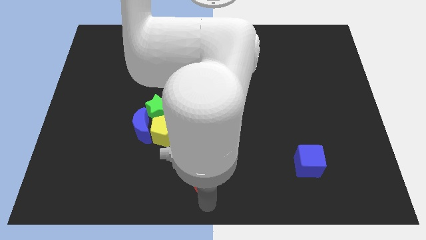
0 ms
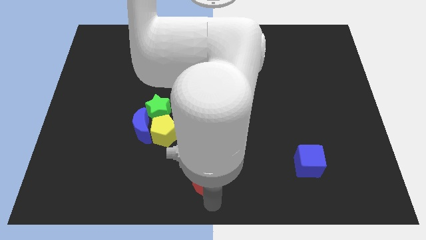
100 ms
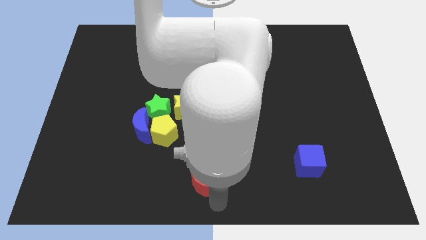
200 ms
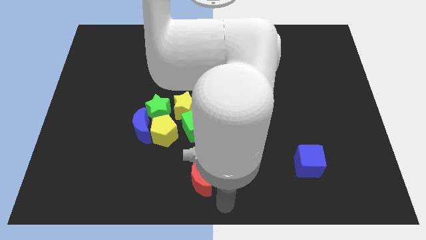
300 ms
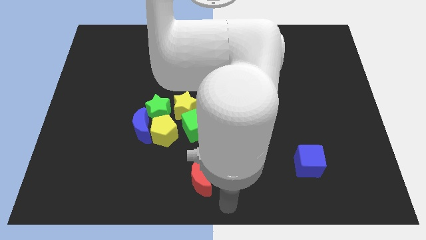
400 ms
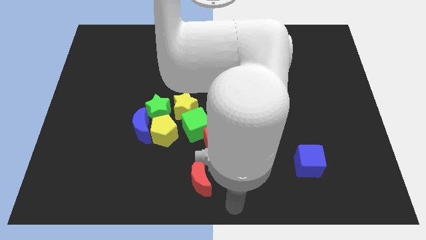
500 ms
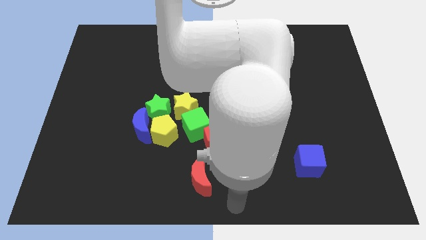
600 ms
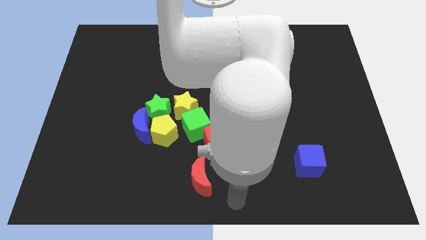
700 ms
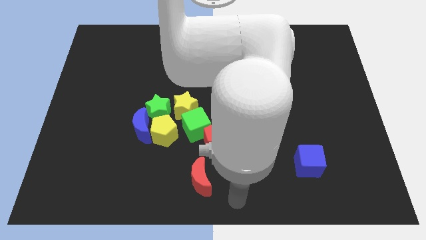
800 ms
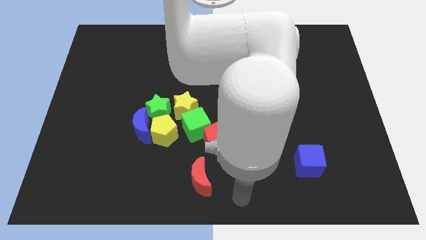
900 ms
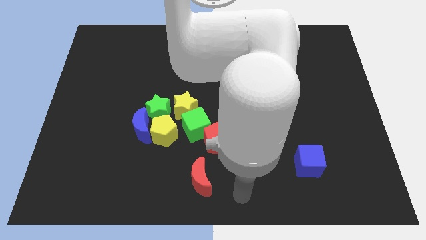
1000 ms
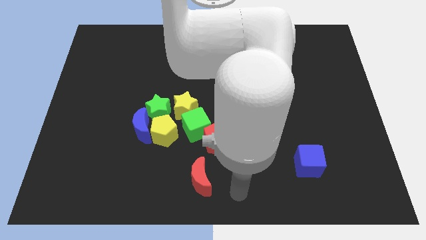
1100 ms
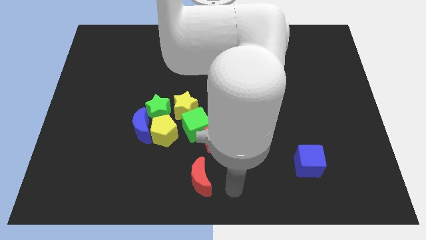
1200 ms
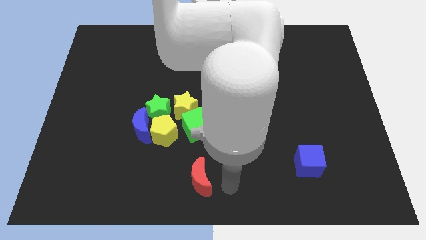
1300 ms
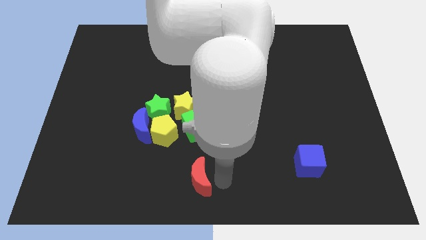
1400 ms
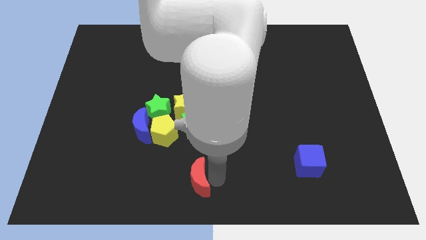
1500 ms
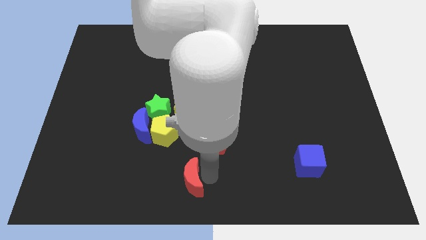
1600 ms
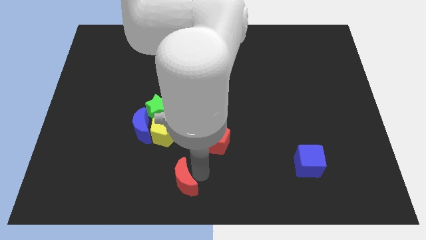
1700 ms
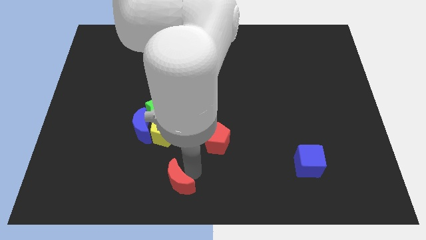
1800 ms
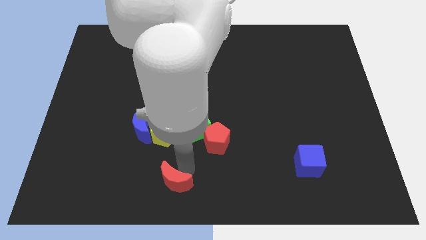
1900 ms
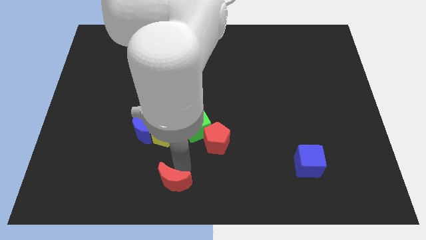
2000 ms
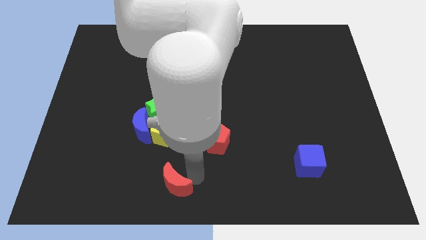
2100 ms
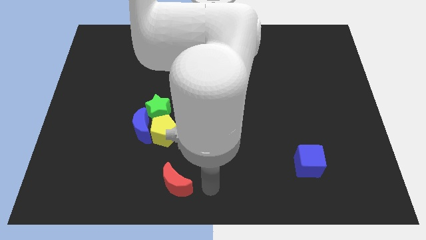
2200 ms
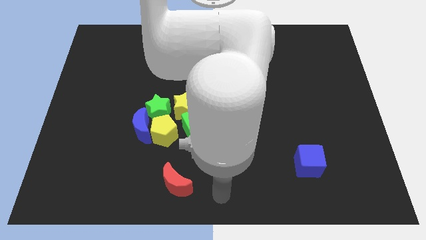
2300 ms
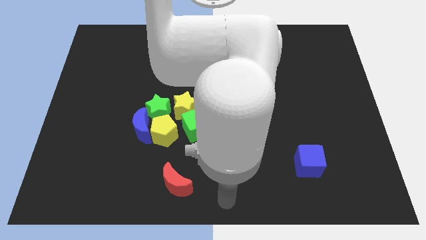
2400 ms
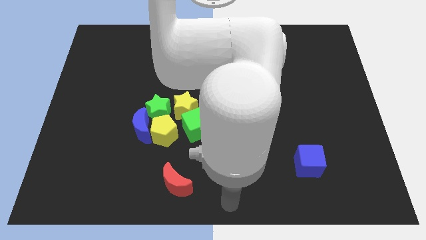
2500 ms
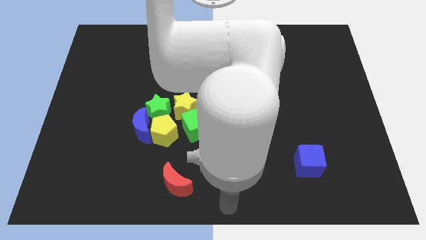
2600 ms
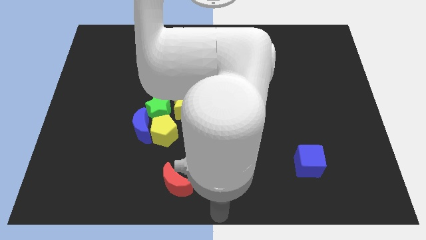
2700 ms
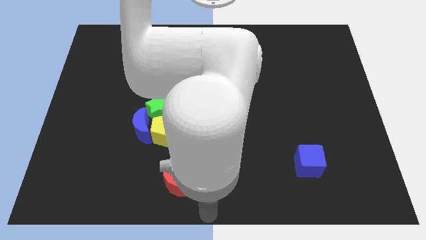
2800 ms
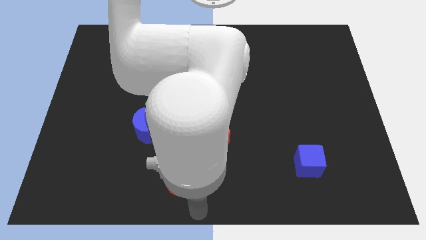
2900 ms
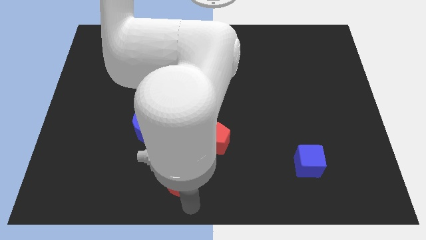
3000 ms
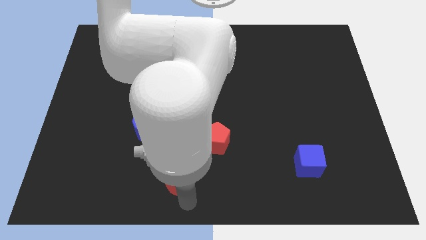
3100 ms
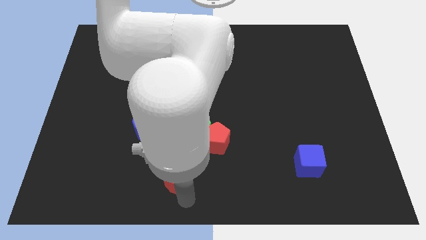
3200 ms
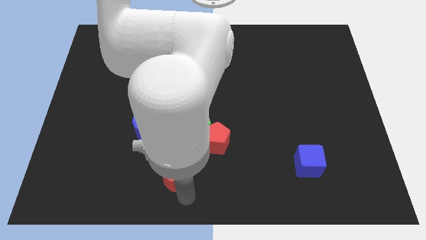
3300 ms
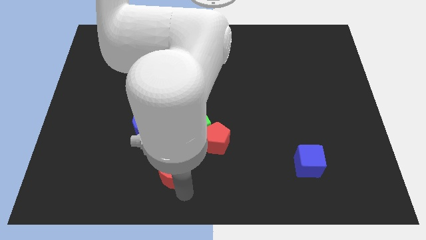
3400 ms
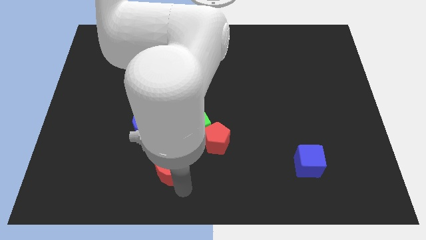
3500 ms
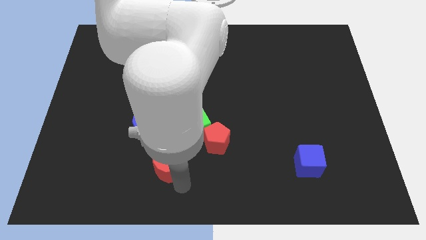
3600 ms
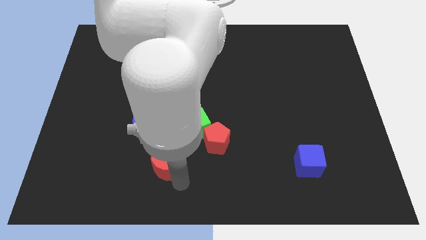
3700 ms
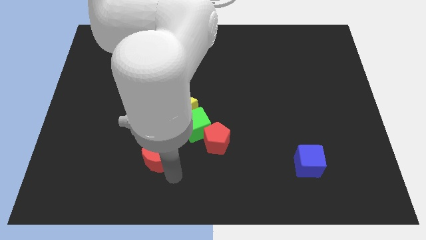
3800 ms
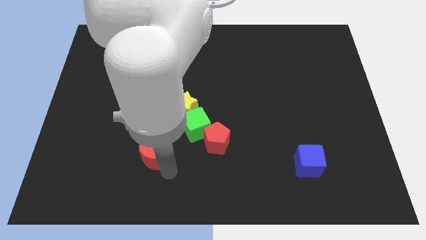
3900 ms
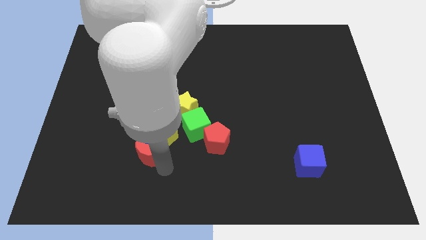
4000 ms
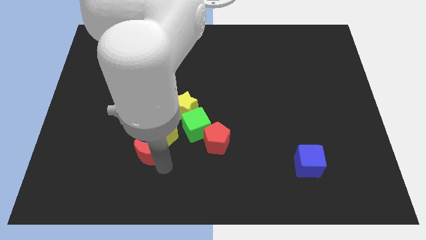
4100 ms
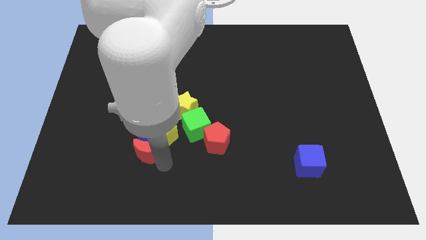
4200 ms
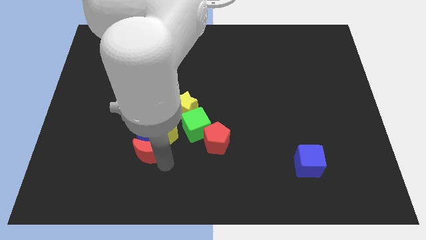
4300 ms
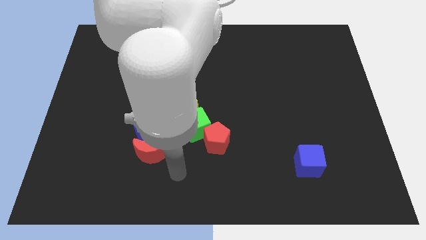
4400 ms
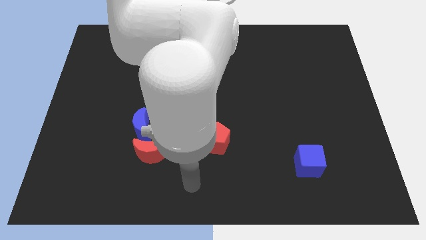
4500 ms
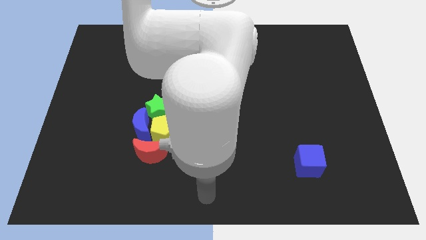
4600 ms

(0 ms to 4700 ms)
place the red moon below the yellow pentagon and blue moon

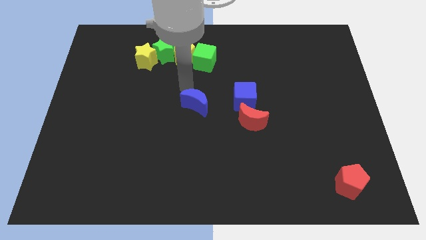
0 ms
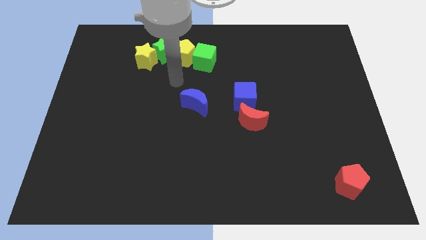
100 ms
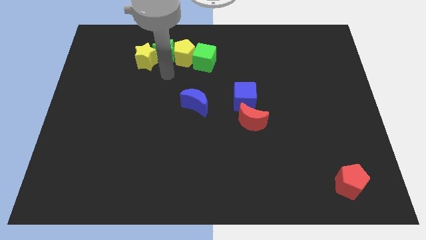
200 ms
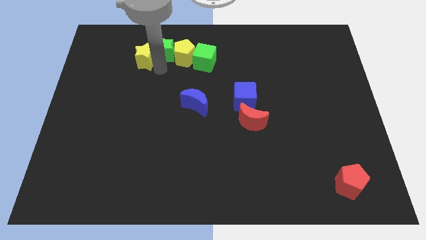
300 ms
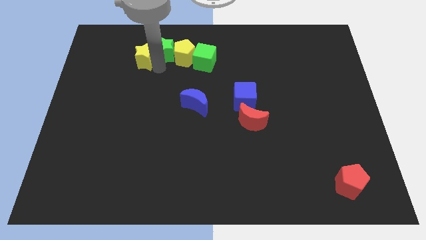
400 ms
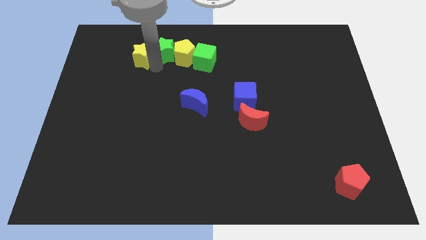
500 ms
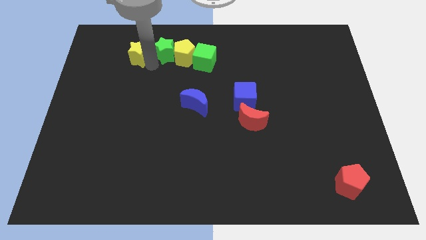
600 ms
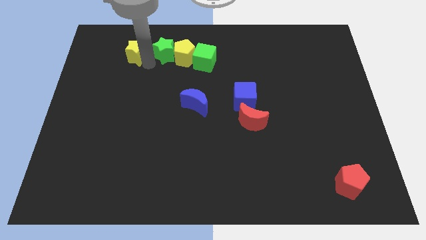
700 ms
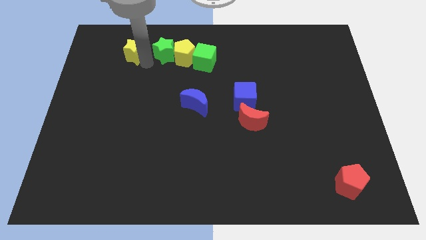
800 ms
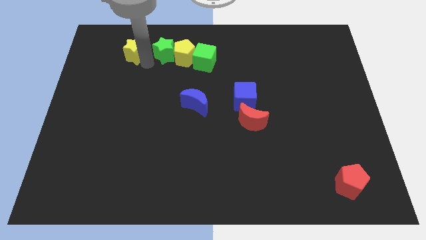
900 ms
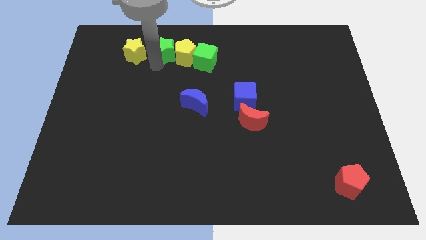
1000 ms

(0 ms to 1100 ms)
separate the yellow star from the green star

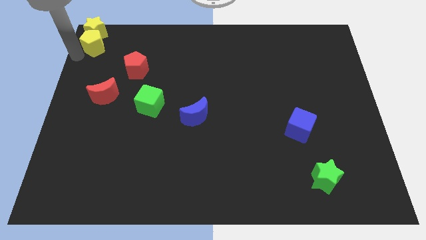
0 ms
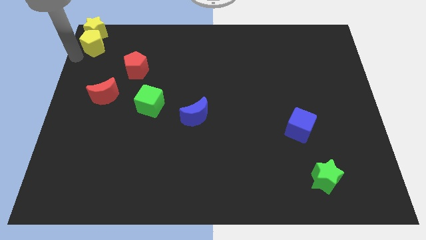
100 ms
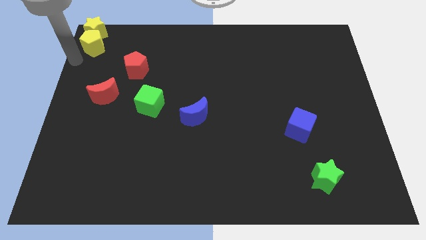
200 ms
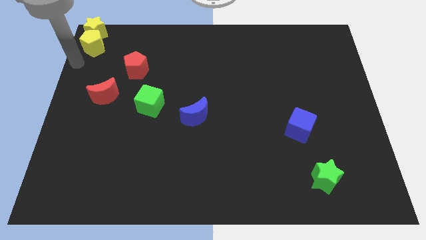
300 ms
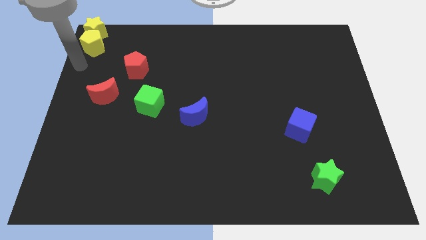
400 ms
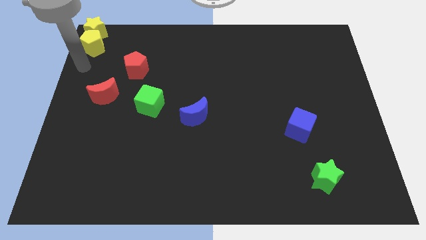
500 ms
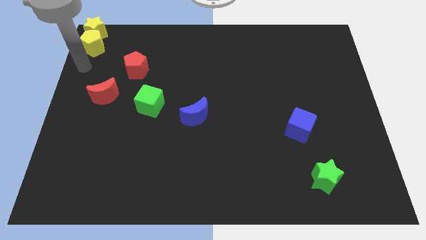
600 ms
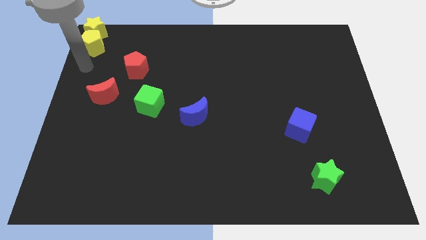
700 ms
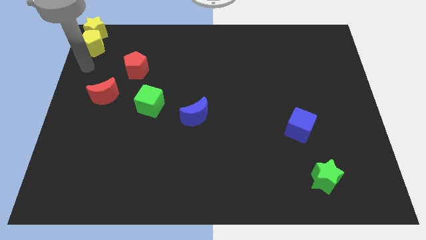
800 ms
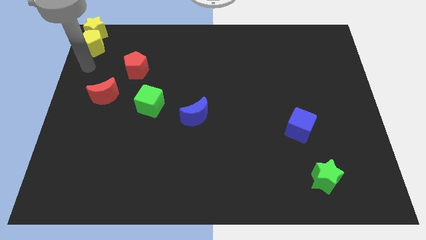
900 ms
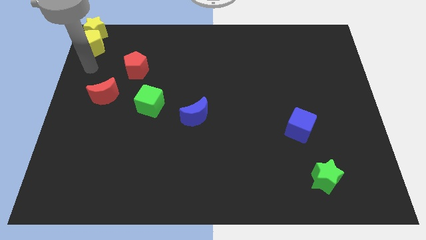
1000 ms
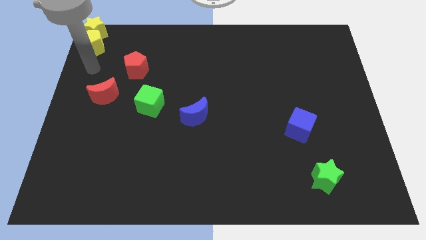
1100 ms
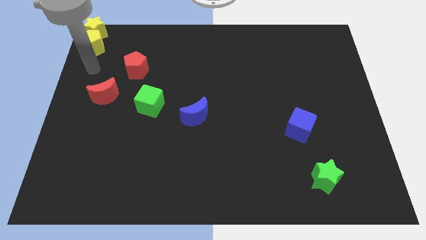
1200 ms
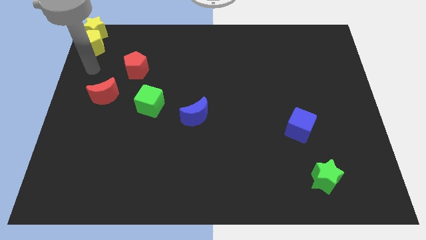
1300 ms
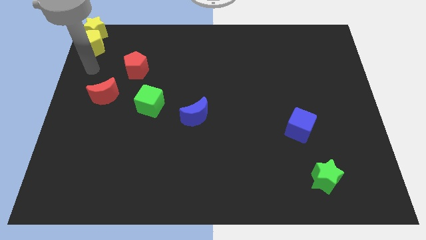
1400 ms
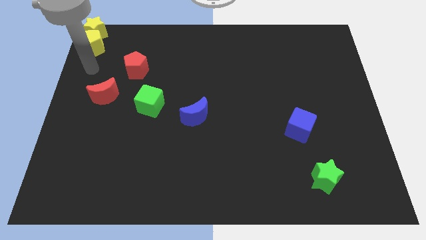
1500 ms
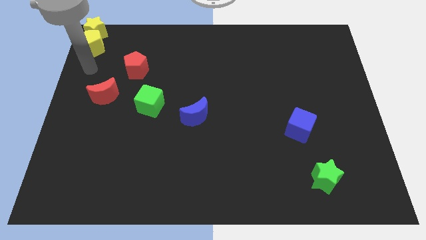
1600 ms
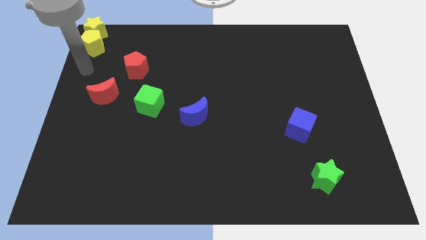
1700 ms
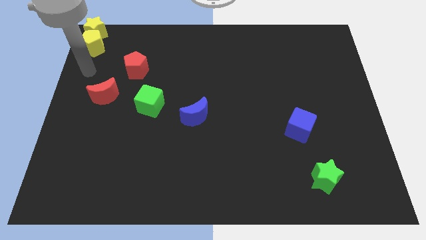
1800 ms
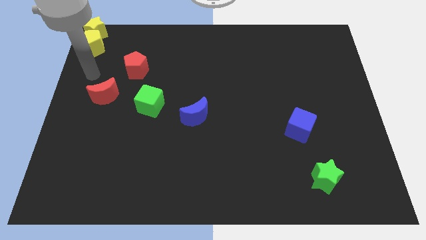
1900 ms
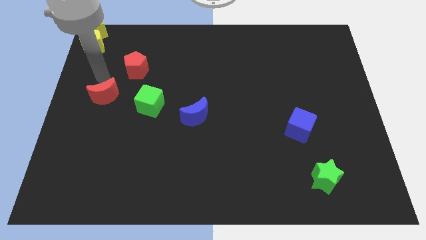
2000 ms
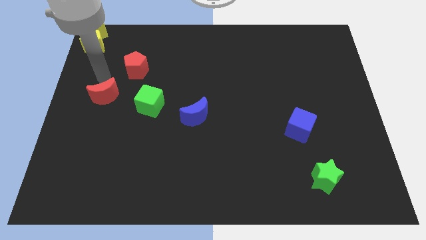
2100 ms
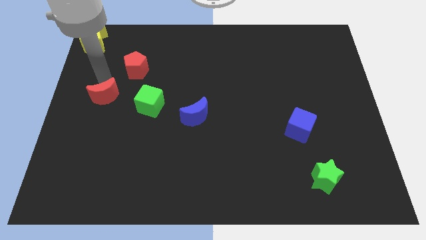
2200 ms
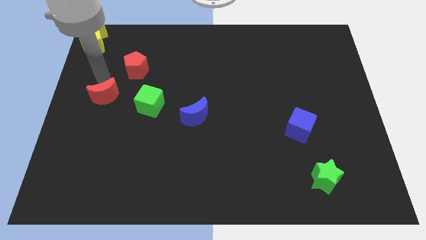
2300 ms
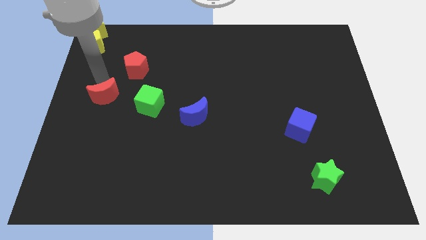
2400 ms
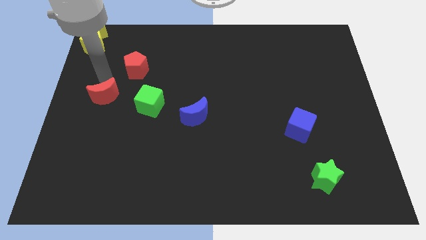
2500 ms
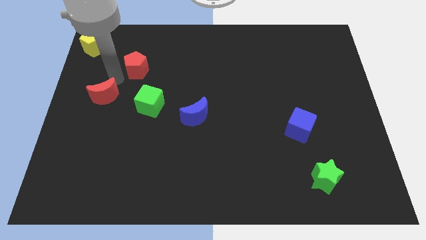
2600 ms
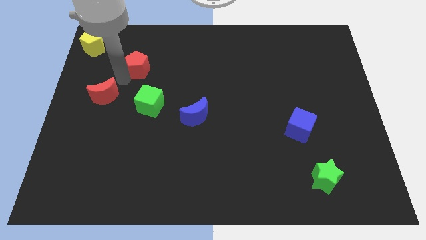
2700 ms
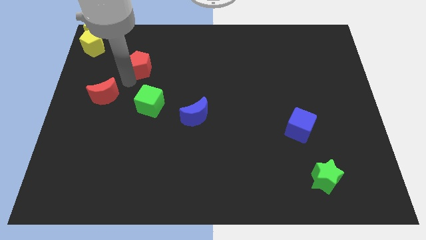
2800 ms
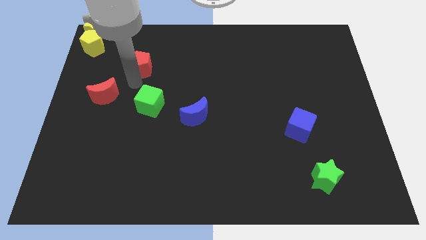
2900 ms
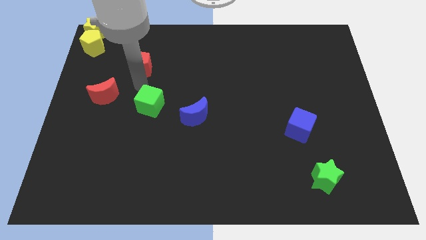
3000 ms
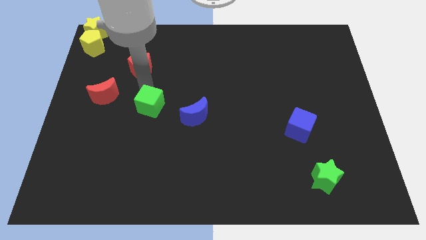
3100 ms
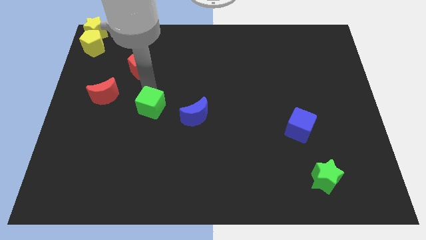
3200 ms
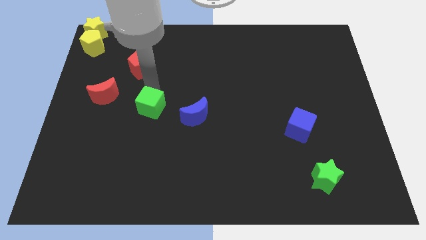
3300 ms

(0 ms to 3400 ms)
move the arm in between the red crescent red pentagon
